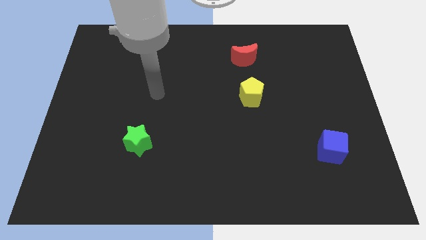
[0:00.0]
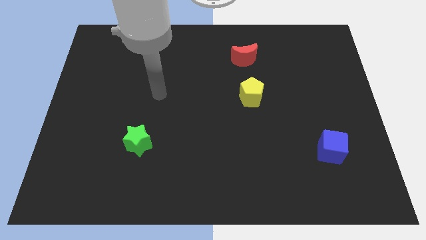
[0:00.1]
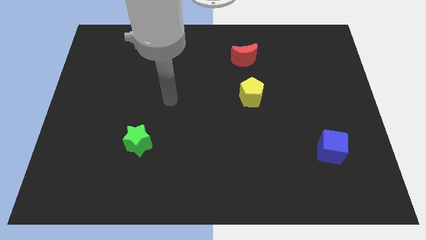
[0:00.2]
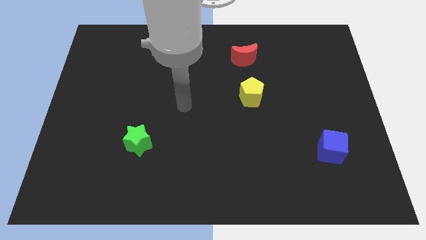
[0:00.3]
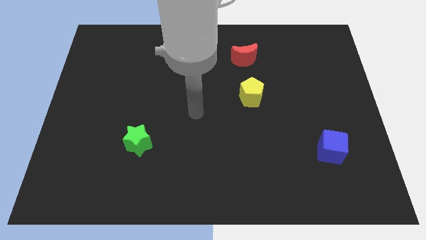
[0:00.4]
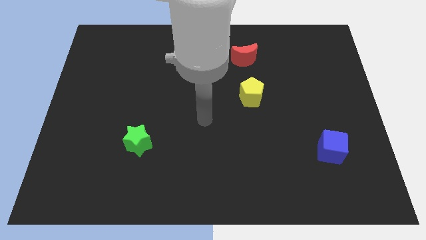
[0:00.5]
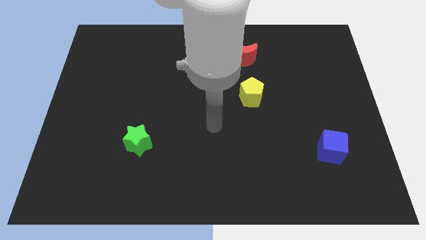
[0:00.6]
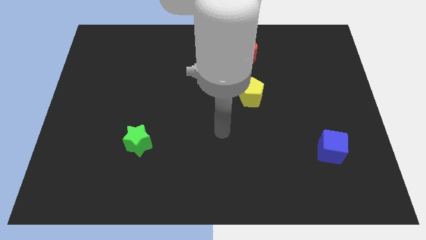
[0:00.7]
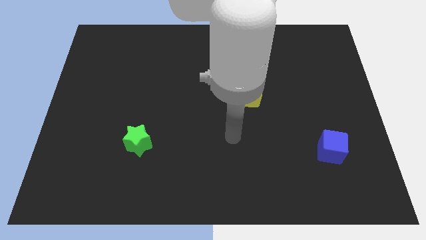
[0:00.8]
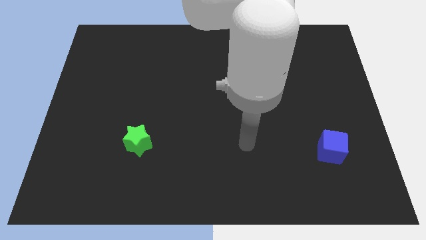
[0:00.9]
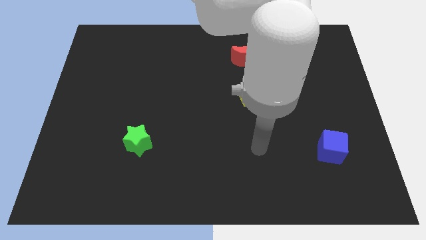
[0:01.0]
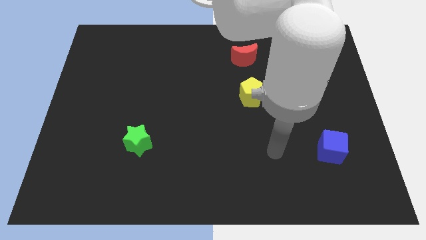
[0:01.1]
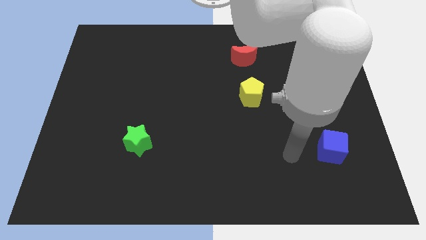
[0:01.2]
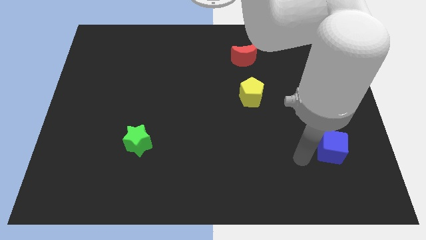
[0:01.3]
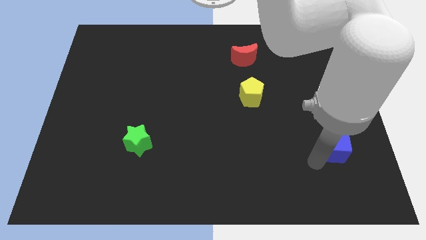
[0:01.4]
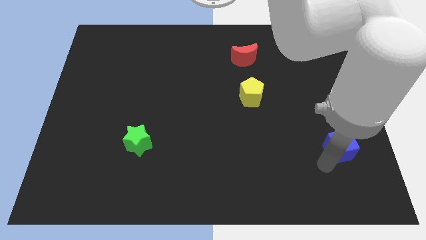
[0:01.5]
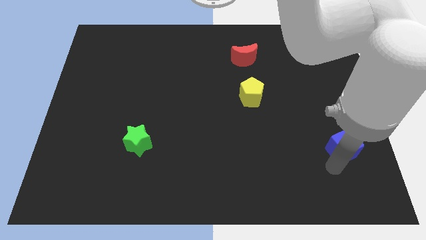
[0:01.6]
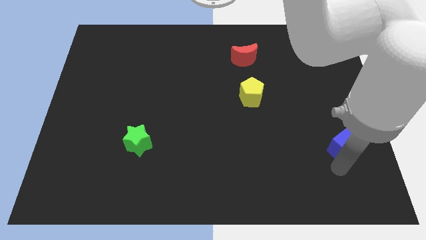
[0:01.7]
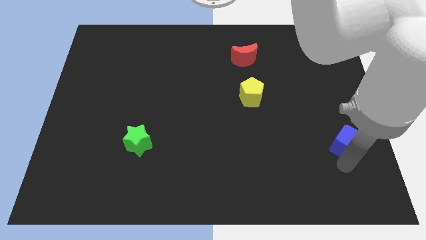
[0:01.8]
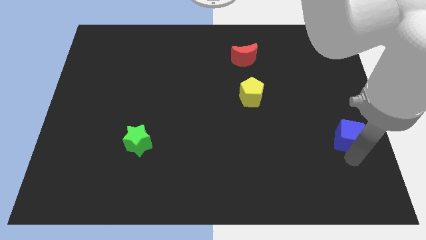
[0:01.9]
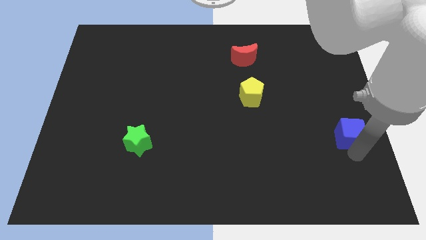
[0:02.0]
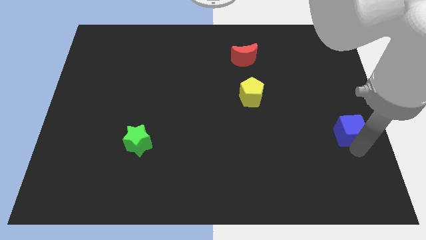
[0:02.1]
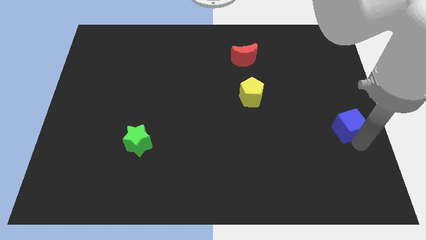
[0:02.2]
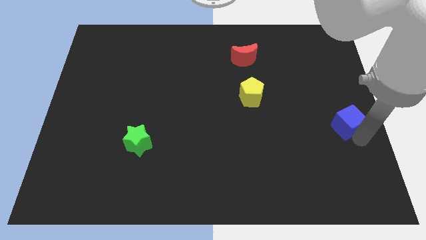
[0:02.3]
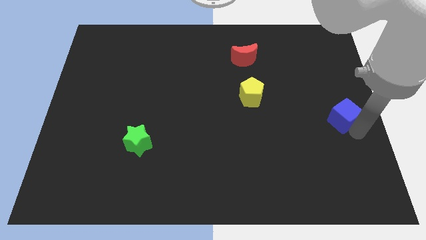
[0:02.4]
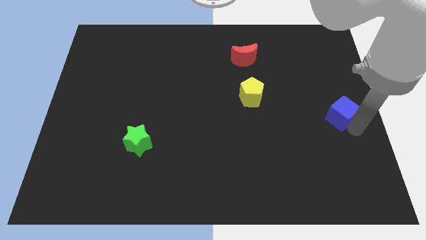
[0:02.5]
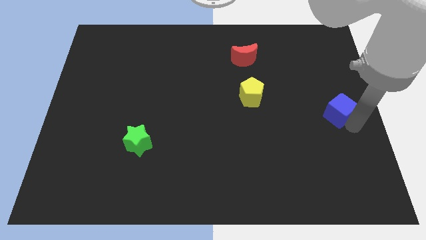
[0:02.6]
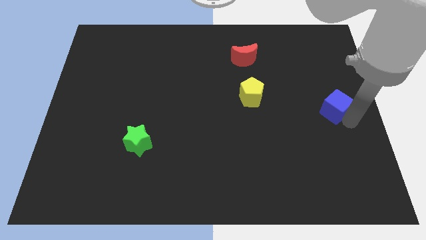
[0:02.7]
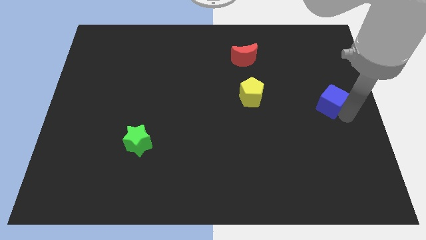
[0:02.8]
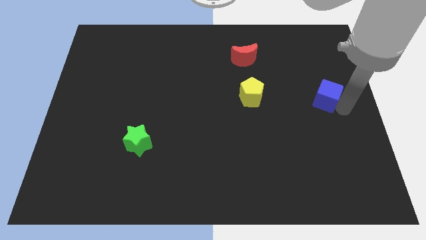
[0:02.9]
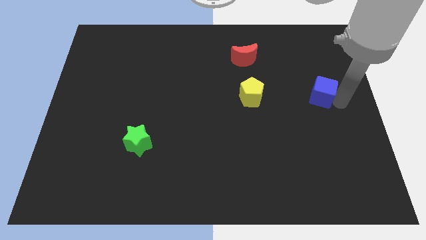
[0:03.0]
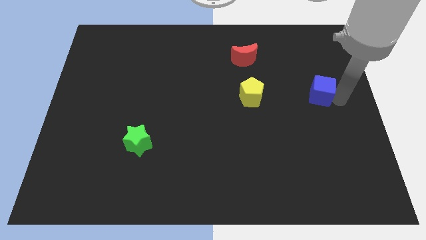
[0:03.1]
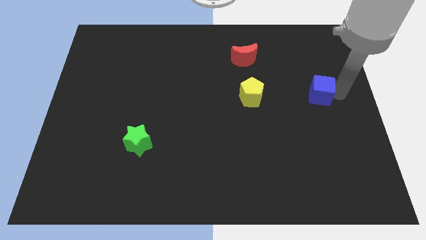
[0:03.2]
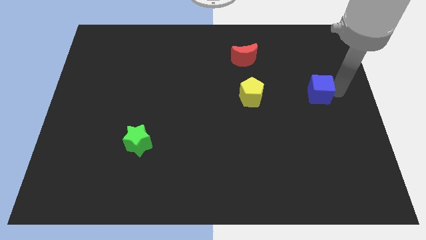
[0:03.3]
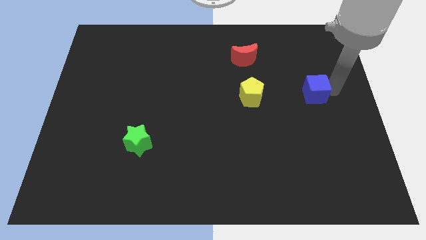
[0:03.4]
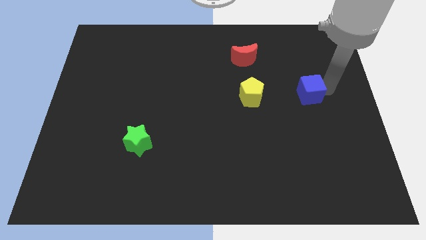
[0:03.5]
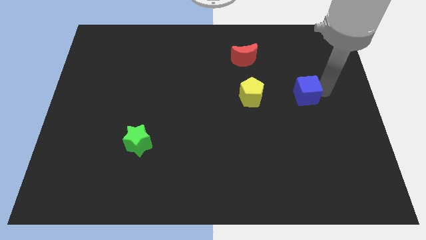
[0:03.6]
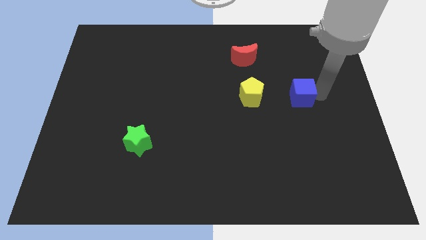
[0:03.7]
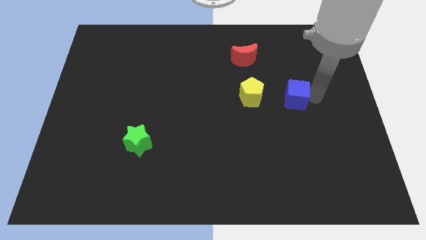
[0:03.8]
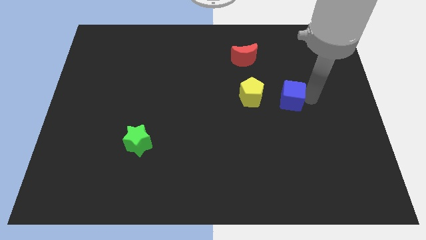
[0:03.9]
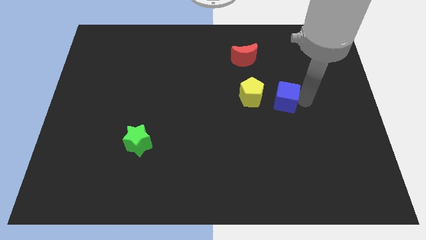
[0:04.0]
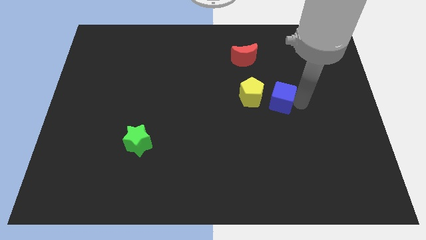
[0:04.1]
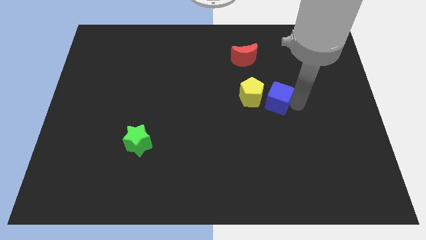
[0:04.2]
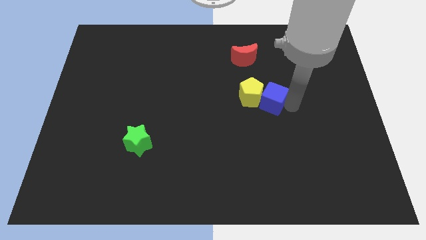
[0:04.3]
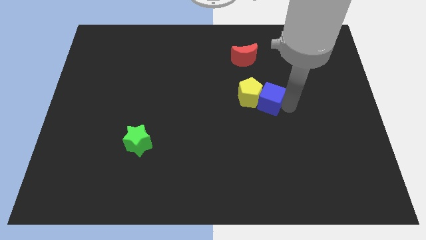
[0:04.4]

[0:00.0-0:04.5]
put the blue block close to the pentagon

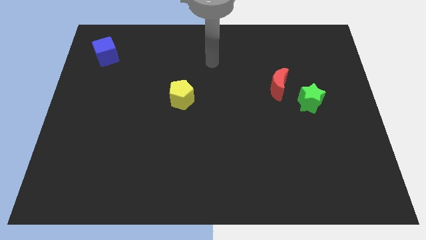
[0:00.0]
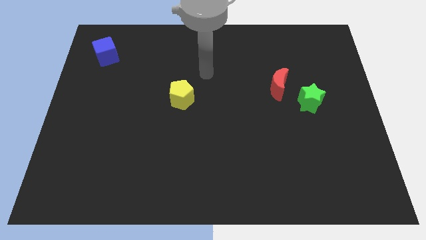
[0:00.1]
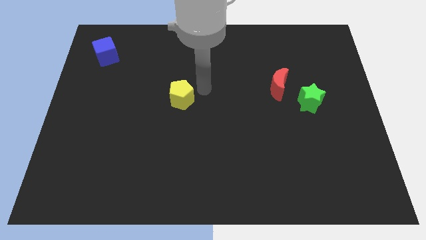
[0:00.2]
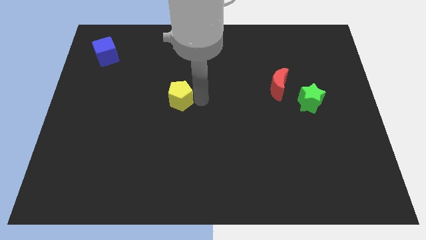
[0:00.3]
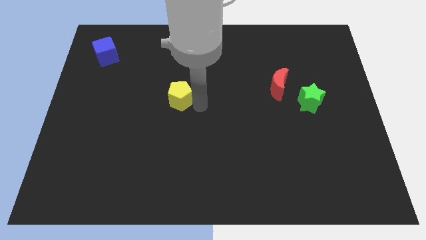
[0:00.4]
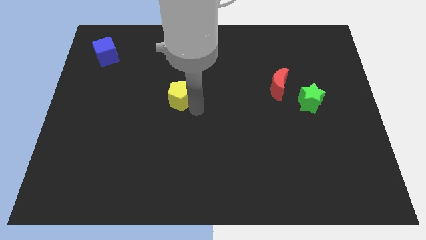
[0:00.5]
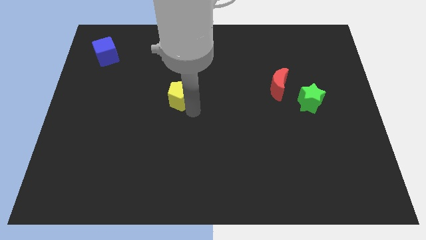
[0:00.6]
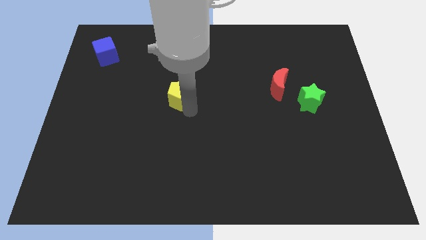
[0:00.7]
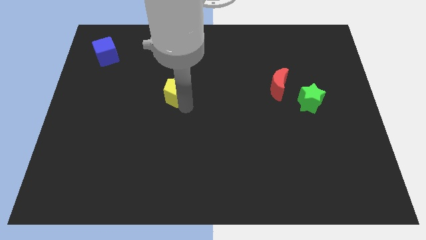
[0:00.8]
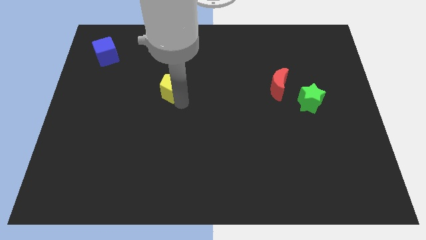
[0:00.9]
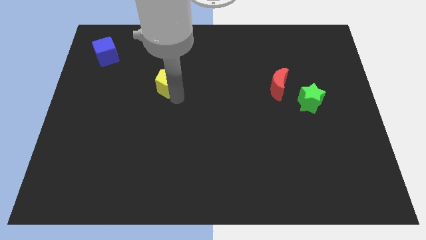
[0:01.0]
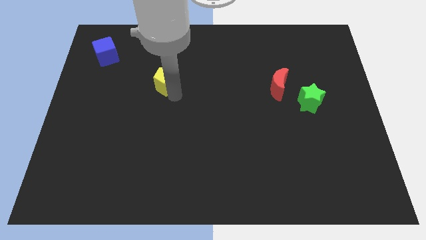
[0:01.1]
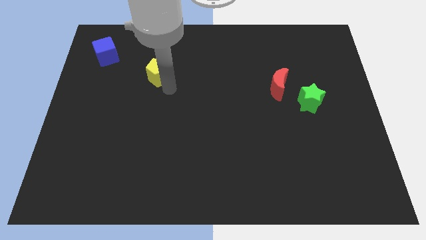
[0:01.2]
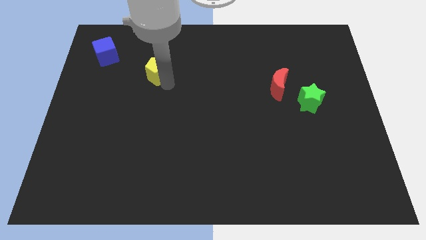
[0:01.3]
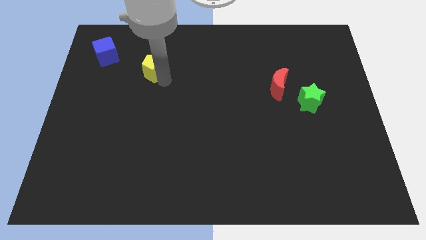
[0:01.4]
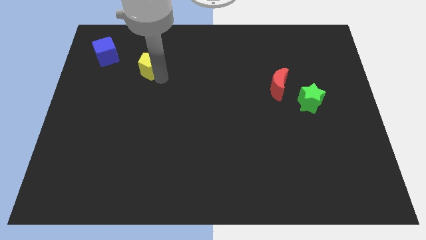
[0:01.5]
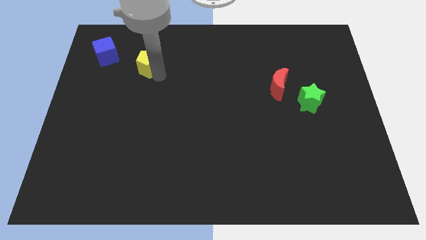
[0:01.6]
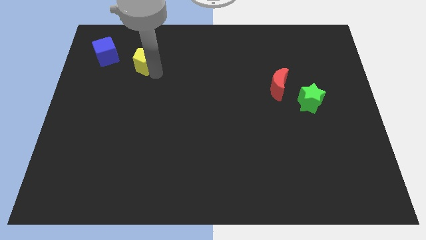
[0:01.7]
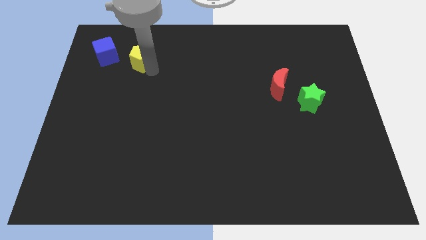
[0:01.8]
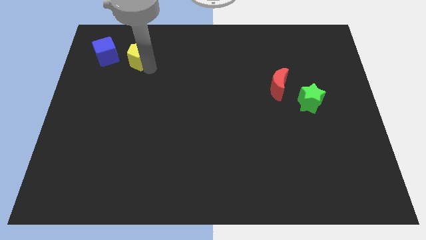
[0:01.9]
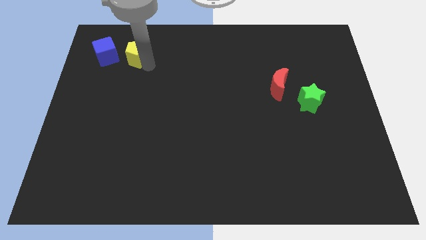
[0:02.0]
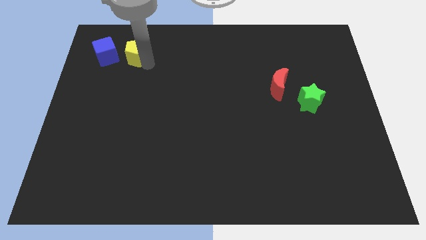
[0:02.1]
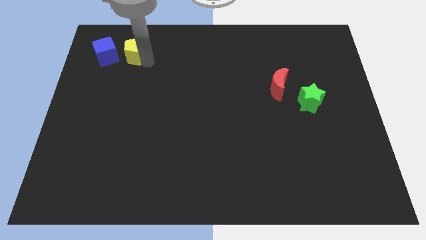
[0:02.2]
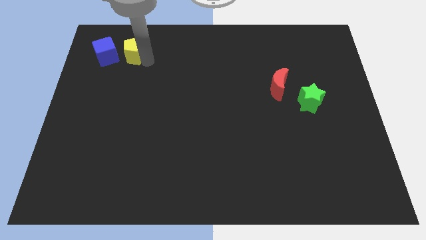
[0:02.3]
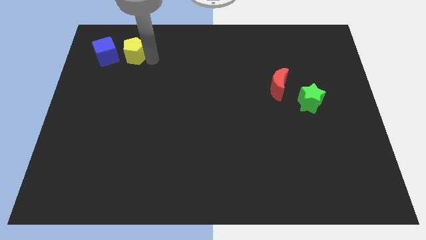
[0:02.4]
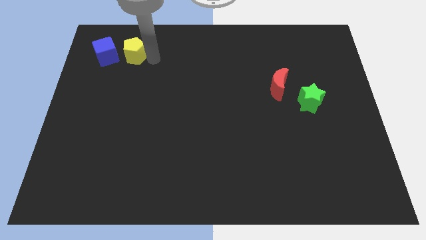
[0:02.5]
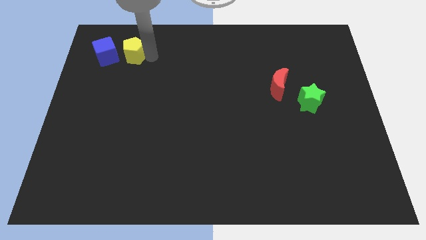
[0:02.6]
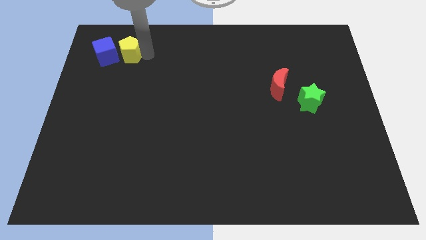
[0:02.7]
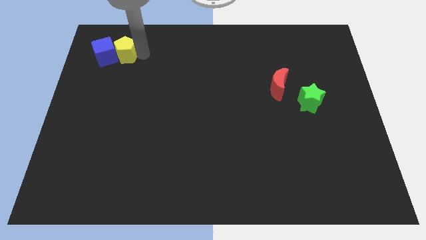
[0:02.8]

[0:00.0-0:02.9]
slide the pentagon next to the blue block

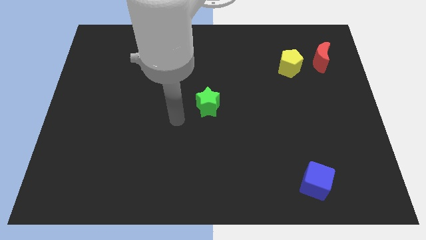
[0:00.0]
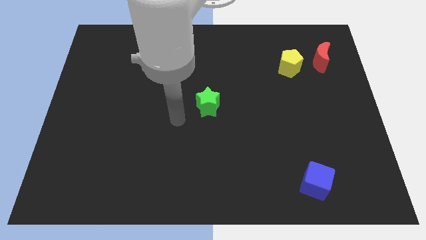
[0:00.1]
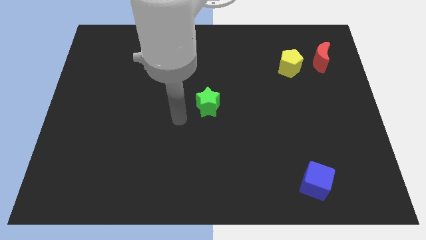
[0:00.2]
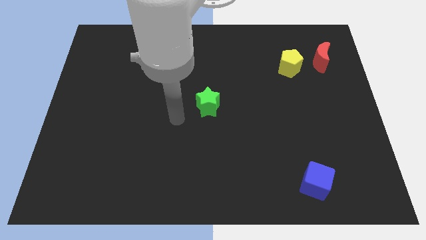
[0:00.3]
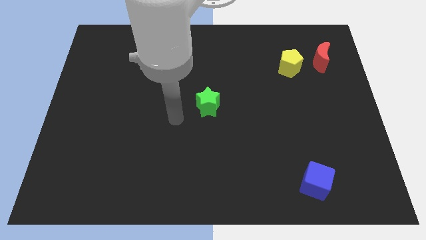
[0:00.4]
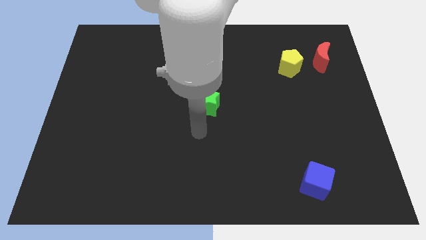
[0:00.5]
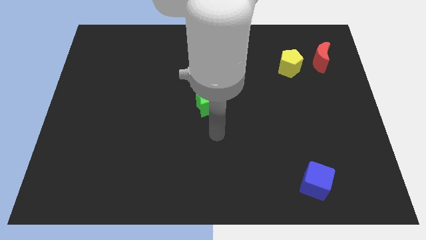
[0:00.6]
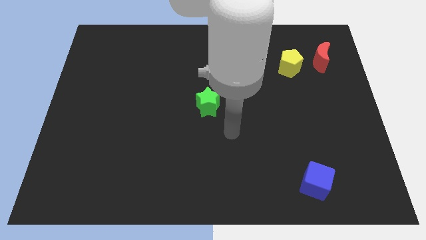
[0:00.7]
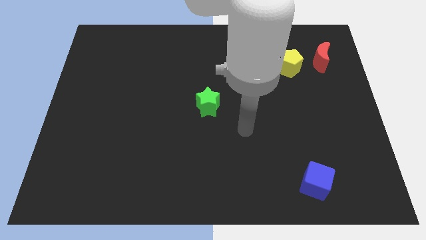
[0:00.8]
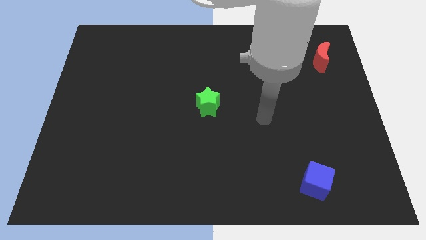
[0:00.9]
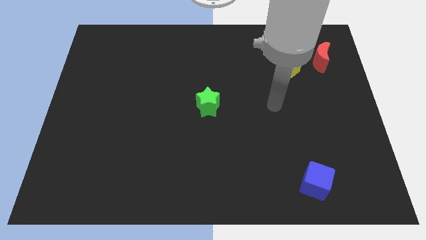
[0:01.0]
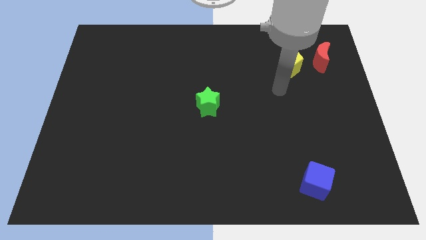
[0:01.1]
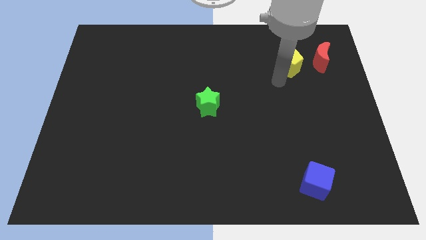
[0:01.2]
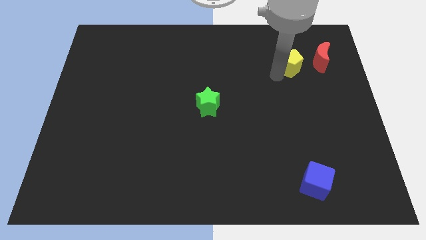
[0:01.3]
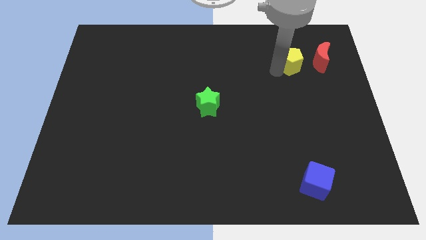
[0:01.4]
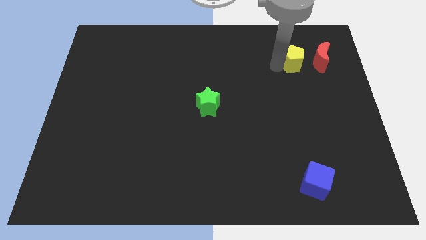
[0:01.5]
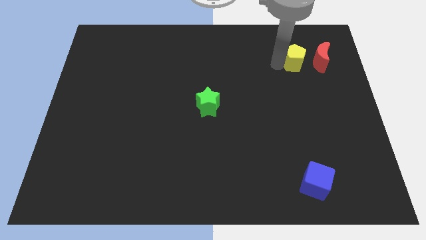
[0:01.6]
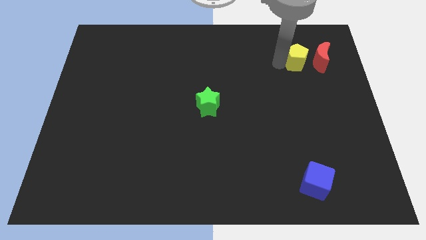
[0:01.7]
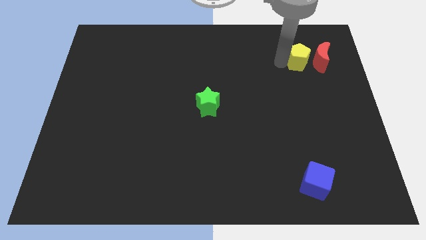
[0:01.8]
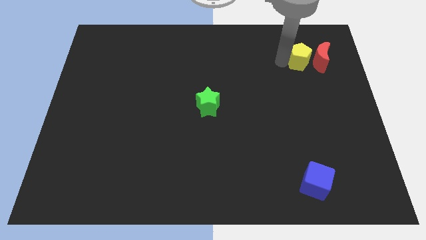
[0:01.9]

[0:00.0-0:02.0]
move the yellow pentagon to the red moon
